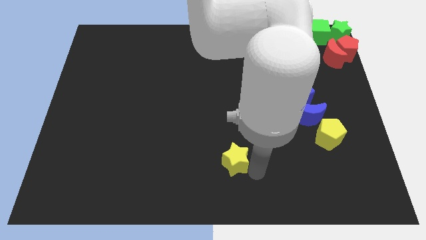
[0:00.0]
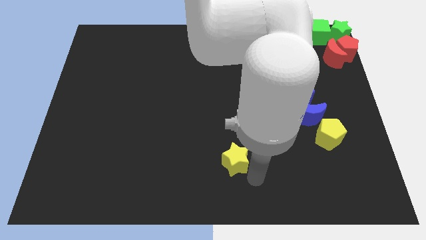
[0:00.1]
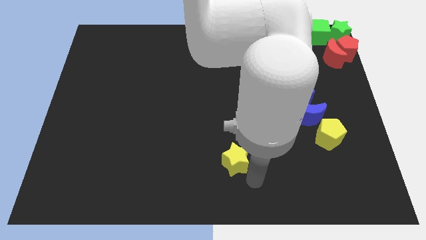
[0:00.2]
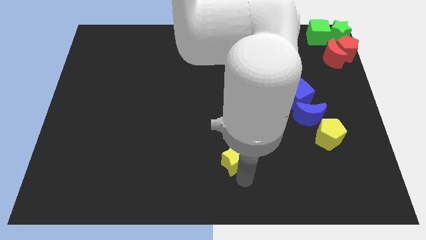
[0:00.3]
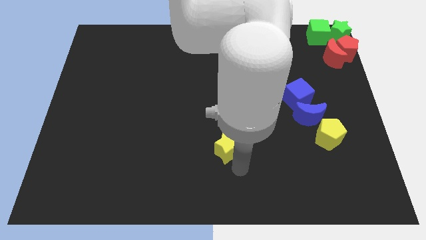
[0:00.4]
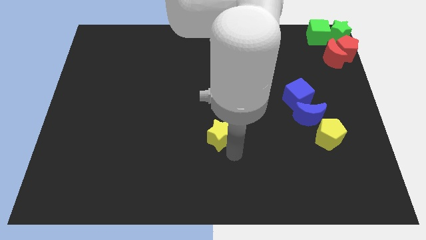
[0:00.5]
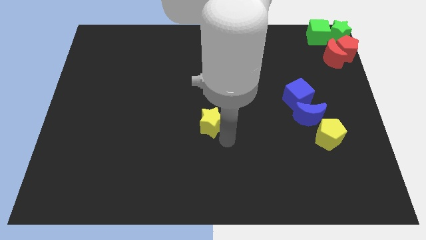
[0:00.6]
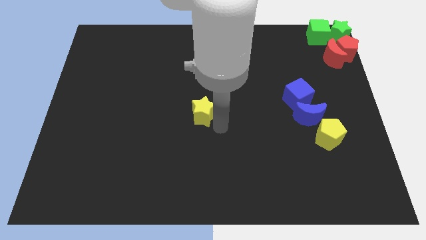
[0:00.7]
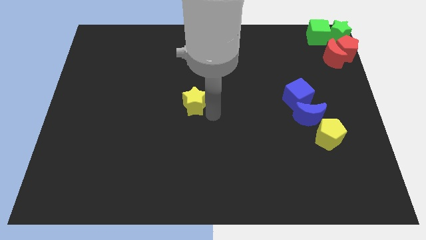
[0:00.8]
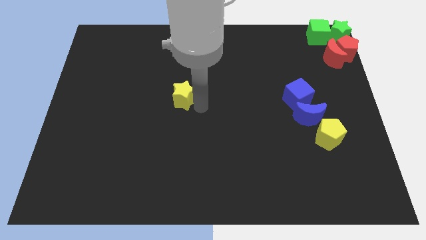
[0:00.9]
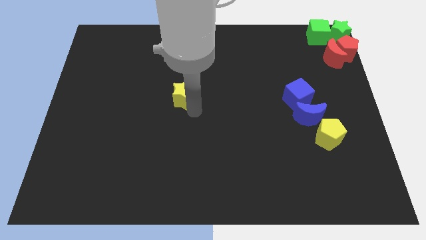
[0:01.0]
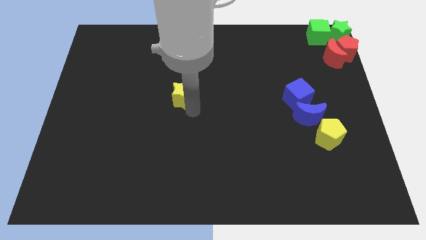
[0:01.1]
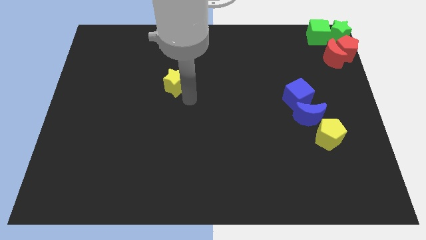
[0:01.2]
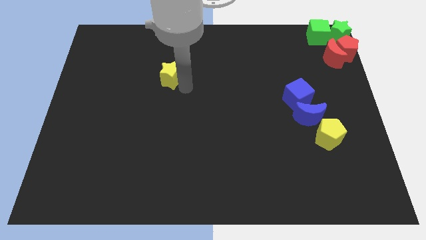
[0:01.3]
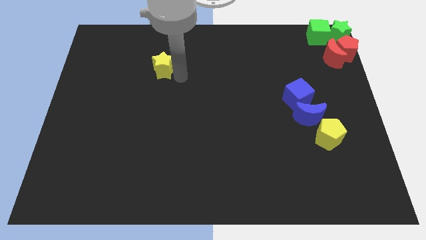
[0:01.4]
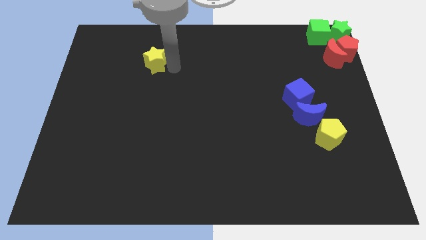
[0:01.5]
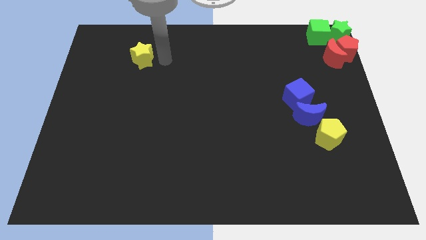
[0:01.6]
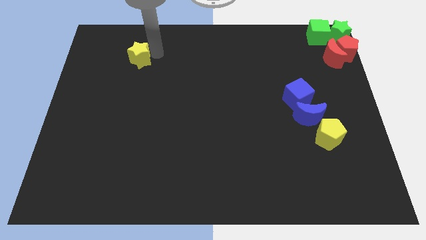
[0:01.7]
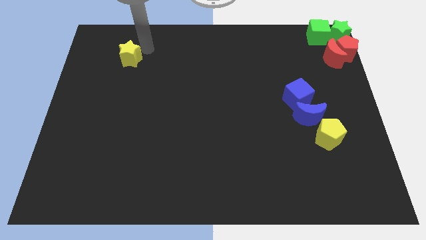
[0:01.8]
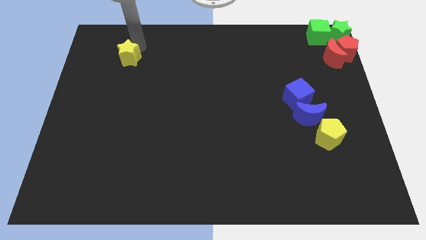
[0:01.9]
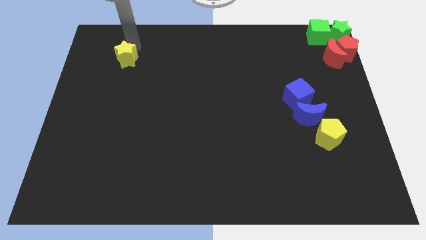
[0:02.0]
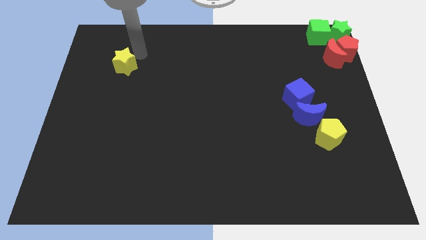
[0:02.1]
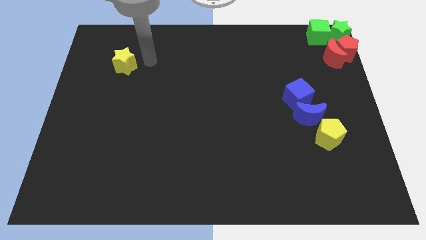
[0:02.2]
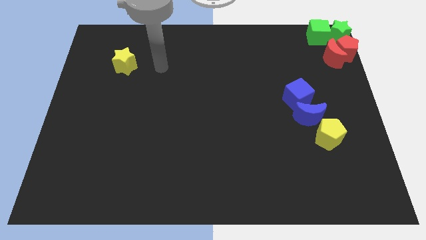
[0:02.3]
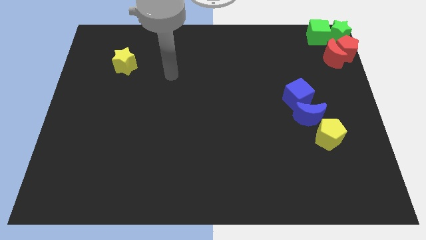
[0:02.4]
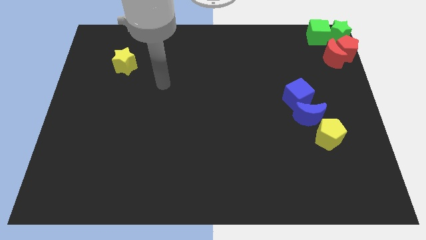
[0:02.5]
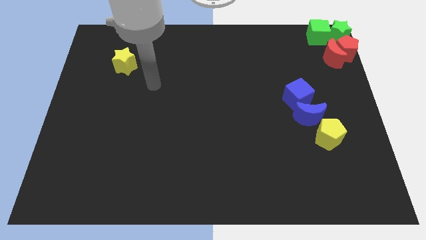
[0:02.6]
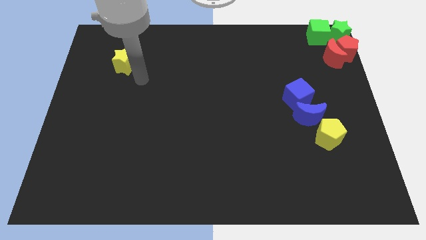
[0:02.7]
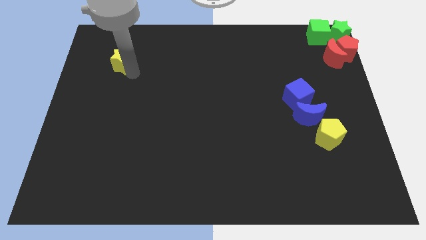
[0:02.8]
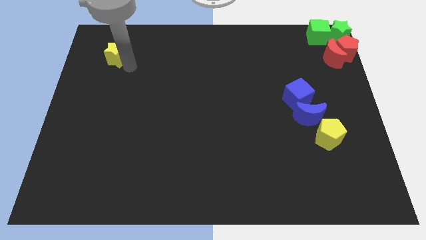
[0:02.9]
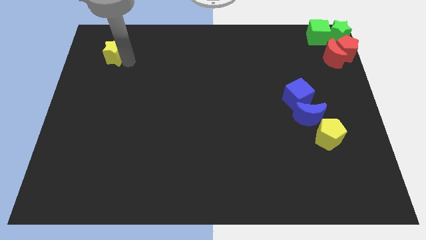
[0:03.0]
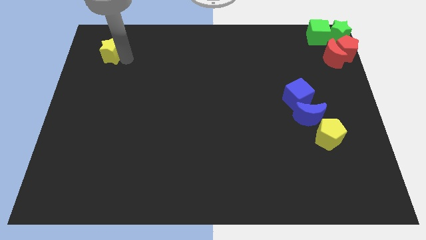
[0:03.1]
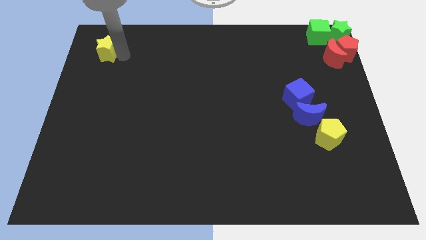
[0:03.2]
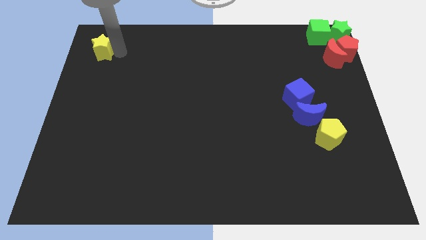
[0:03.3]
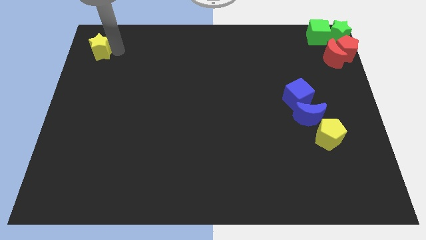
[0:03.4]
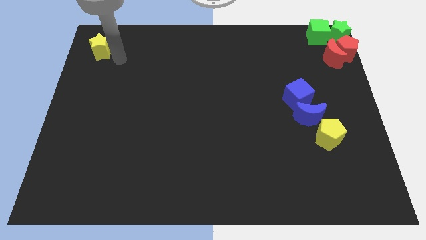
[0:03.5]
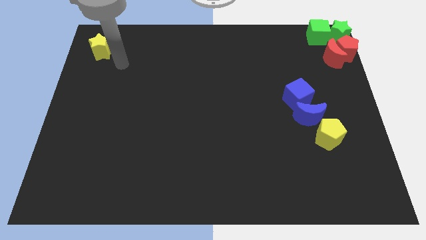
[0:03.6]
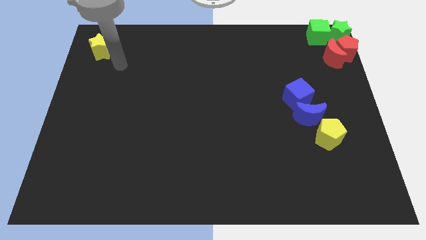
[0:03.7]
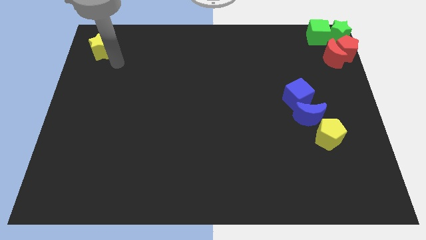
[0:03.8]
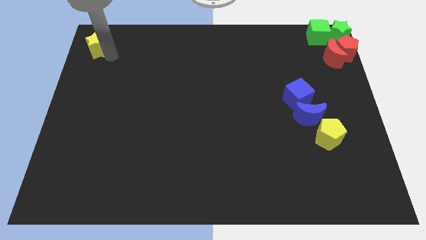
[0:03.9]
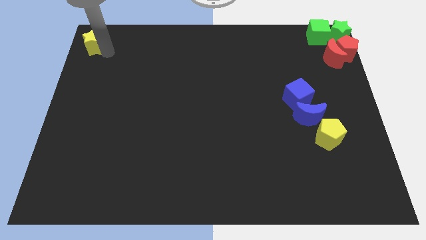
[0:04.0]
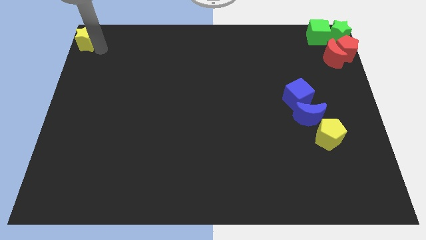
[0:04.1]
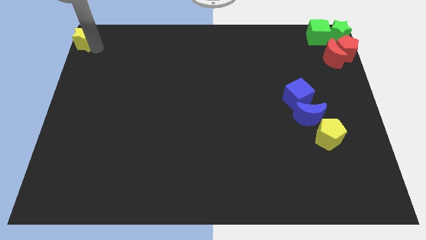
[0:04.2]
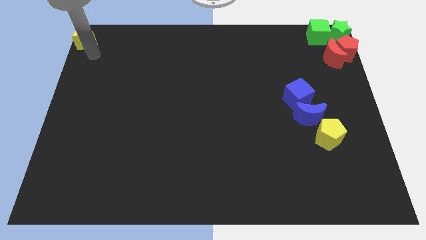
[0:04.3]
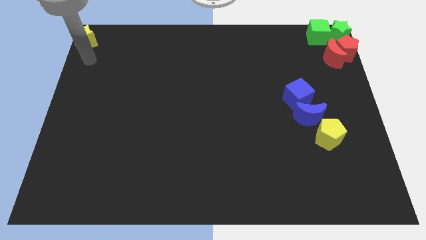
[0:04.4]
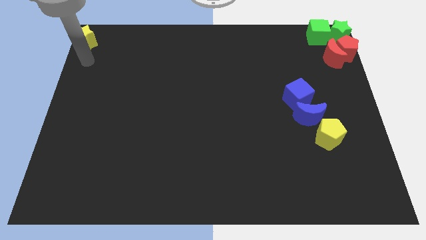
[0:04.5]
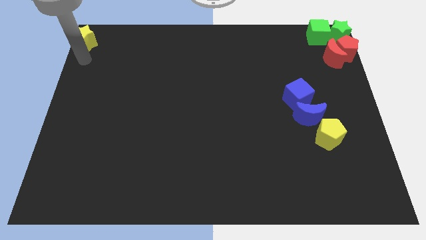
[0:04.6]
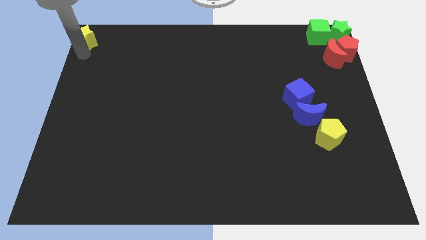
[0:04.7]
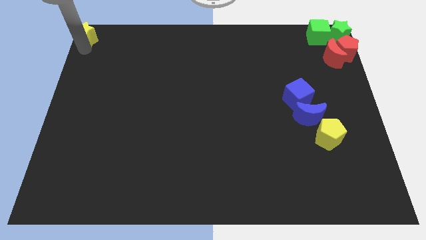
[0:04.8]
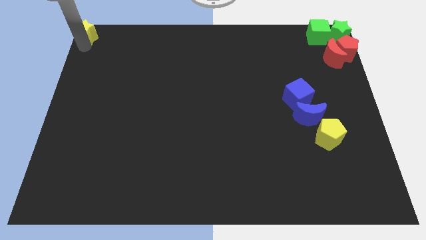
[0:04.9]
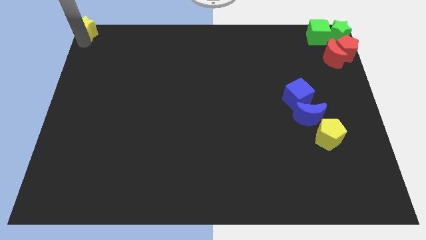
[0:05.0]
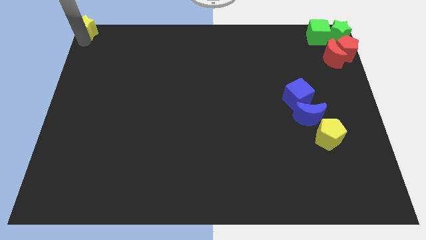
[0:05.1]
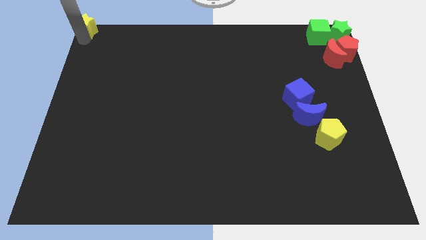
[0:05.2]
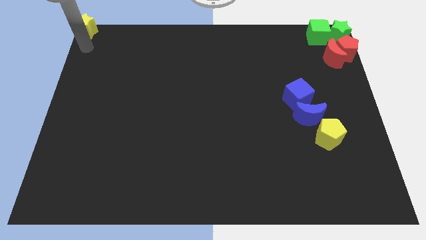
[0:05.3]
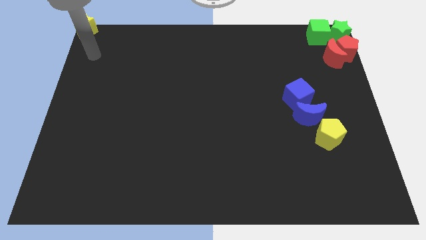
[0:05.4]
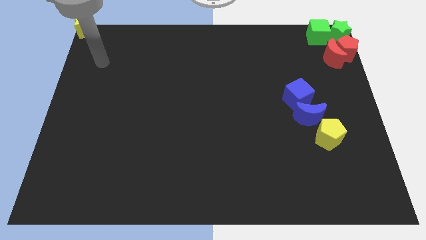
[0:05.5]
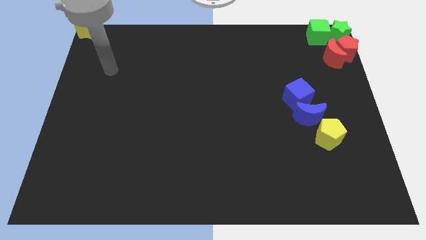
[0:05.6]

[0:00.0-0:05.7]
move the yellow star to the top left corner of the board

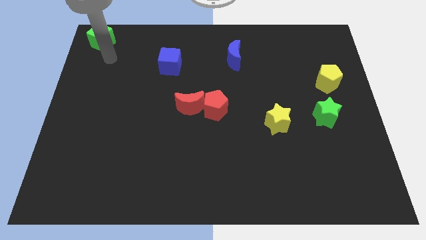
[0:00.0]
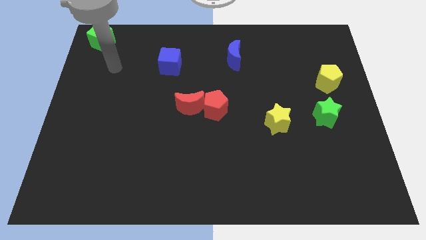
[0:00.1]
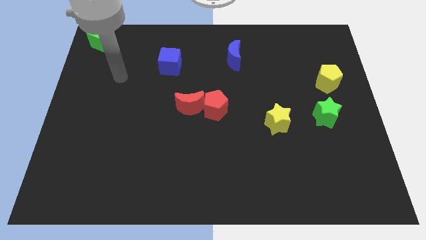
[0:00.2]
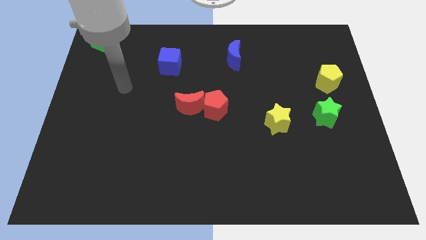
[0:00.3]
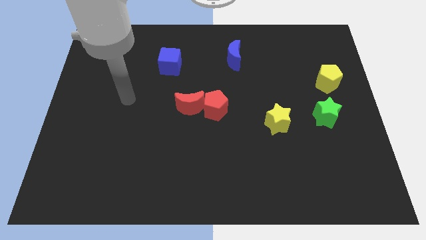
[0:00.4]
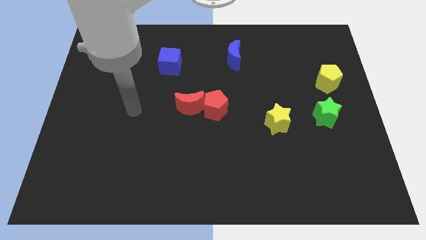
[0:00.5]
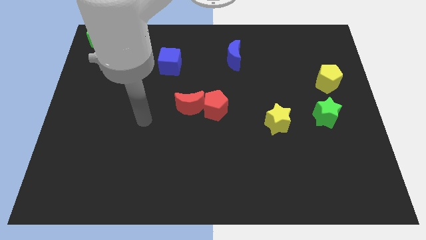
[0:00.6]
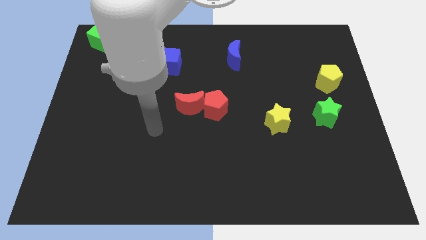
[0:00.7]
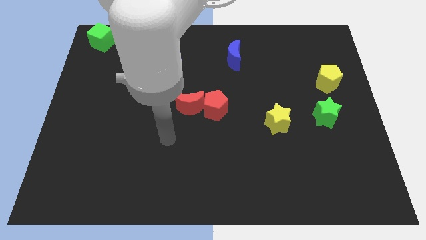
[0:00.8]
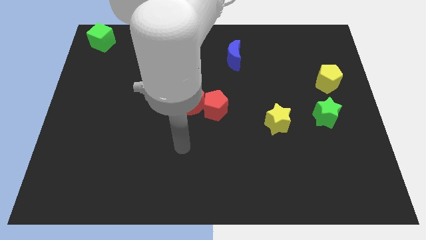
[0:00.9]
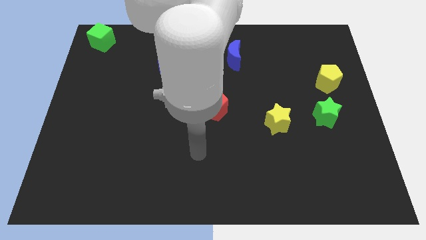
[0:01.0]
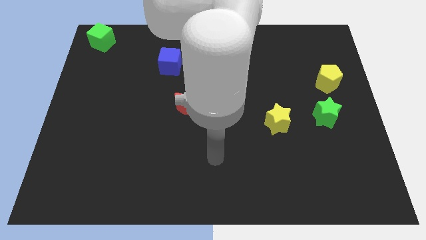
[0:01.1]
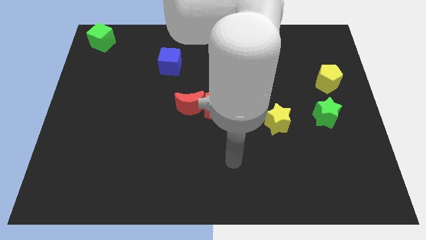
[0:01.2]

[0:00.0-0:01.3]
move your arm towards the bottom center of the board

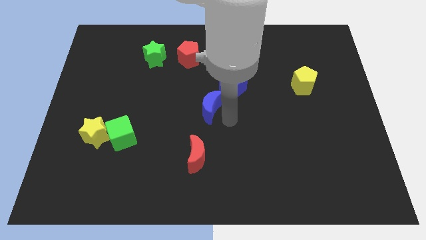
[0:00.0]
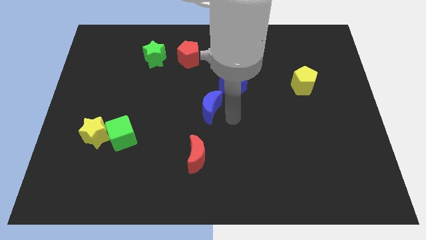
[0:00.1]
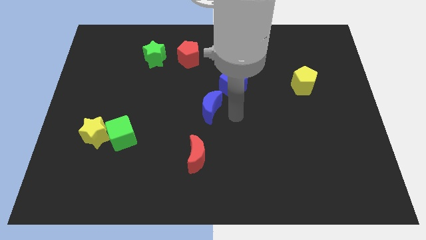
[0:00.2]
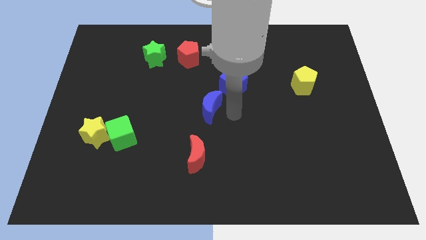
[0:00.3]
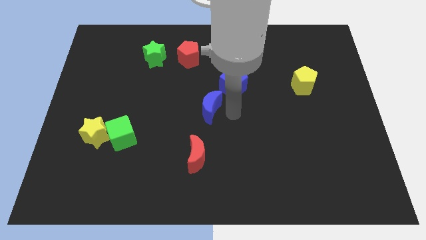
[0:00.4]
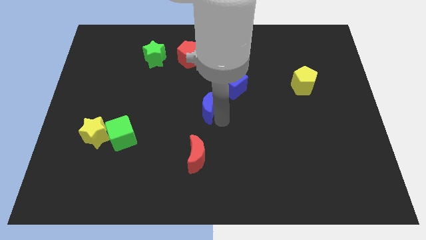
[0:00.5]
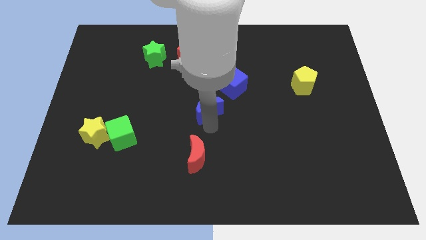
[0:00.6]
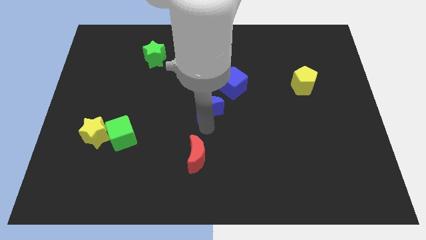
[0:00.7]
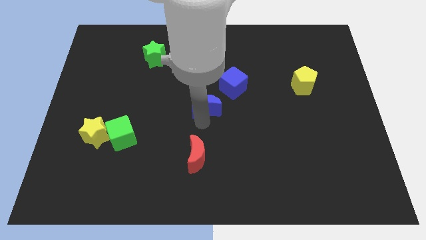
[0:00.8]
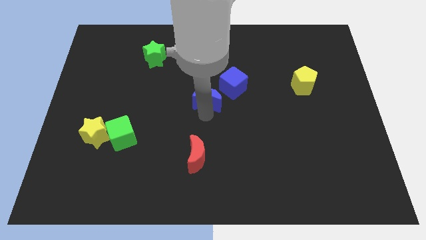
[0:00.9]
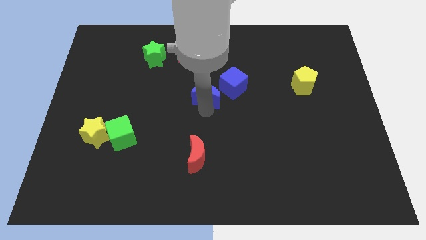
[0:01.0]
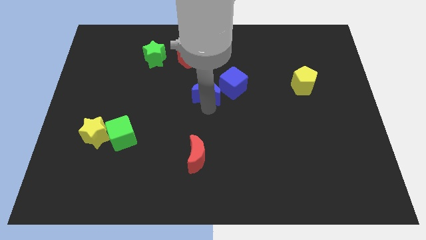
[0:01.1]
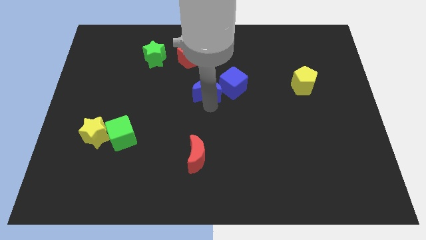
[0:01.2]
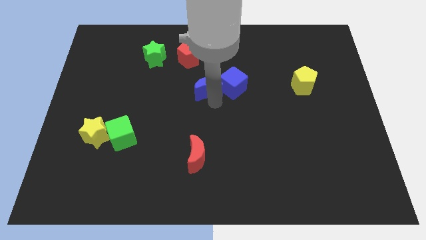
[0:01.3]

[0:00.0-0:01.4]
move the blue moon left to the blue cube

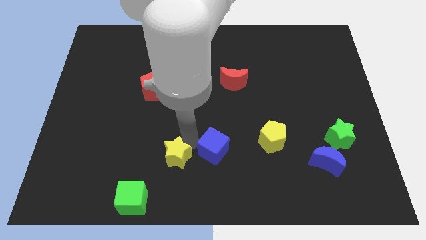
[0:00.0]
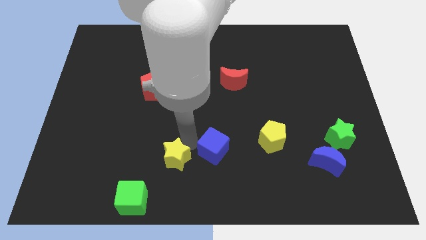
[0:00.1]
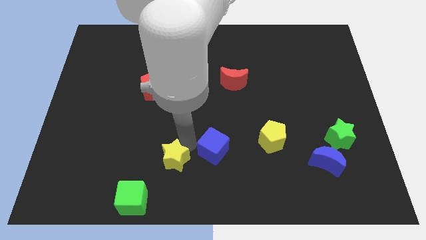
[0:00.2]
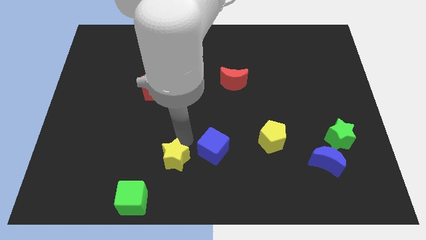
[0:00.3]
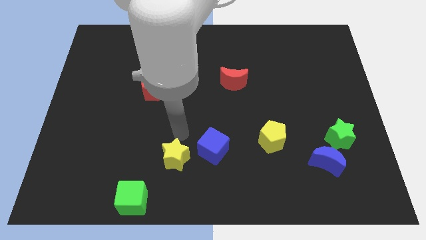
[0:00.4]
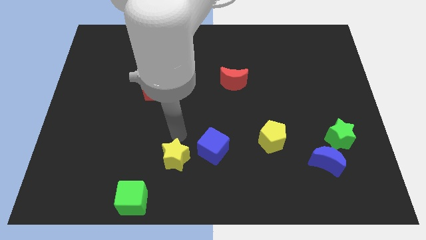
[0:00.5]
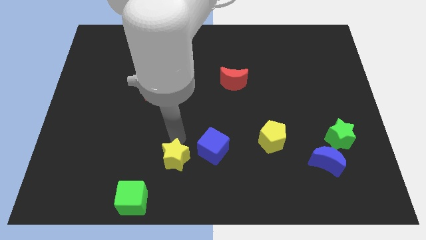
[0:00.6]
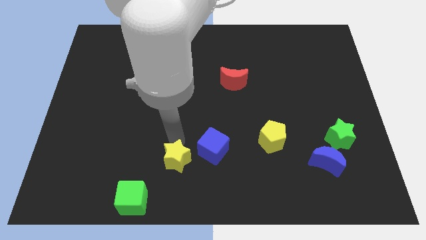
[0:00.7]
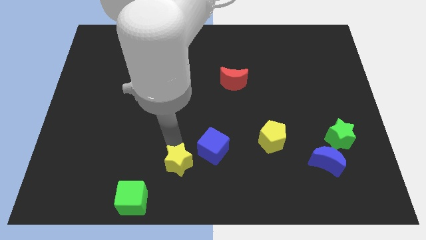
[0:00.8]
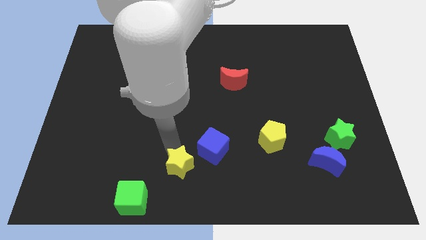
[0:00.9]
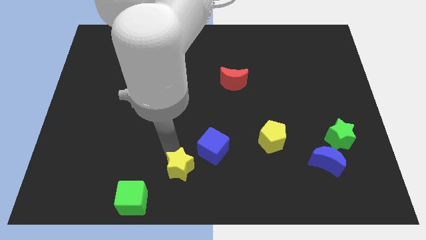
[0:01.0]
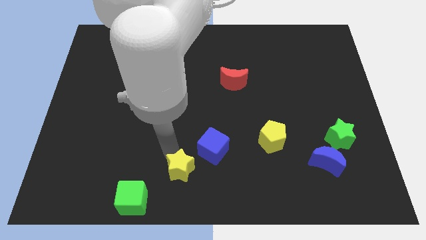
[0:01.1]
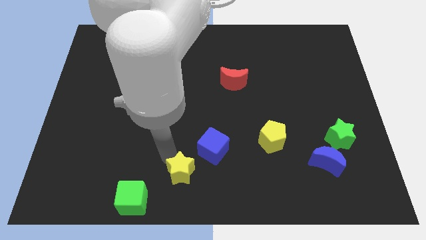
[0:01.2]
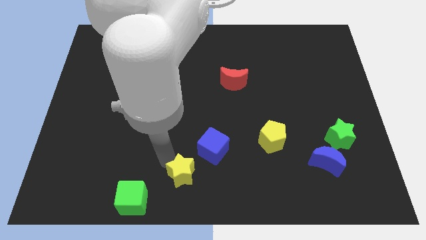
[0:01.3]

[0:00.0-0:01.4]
move the yellow star slightly to the downward
